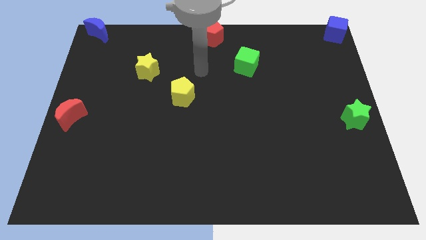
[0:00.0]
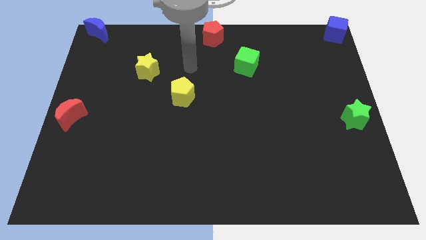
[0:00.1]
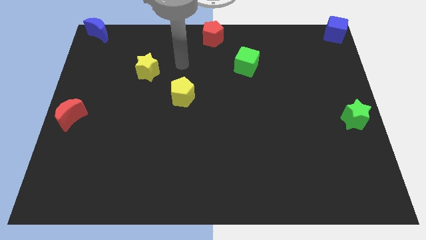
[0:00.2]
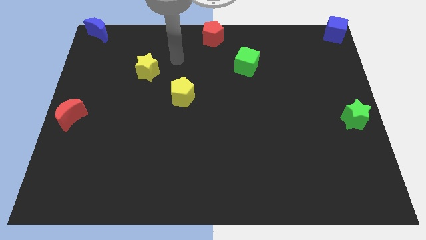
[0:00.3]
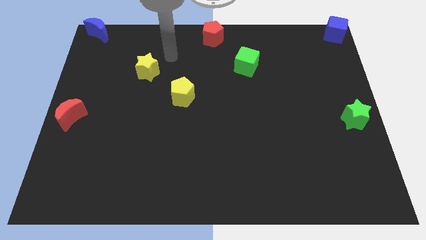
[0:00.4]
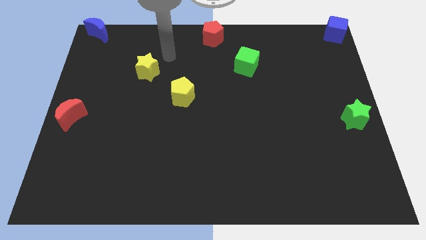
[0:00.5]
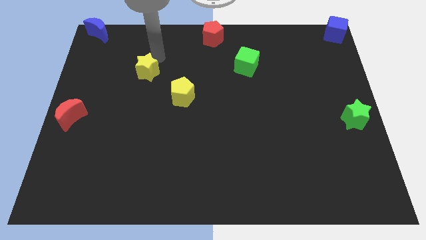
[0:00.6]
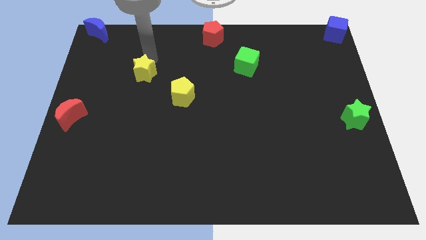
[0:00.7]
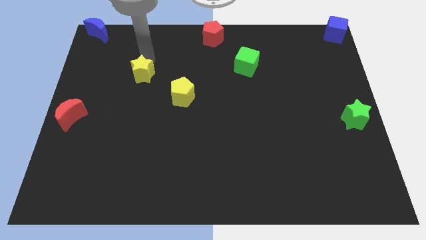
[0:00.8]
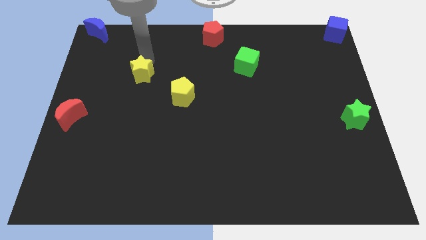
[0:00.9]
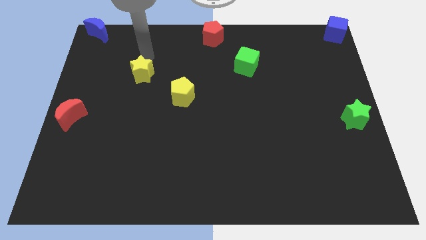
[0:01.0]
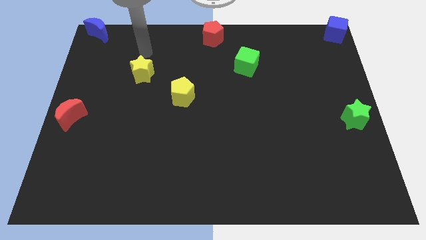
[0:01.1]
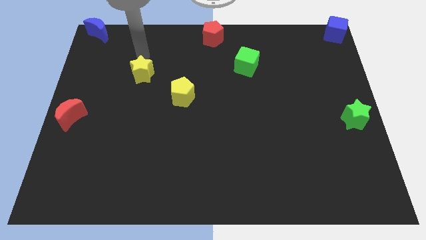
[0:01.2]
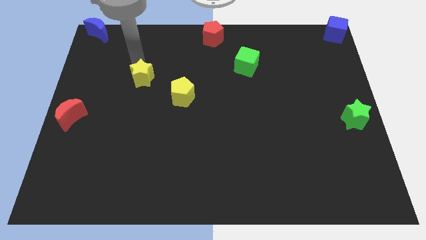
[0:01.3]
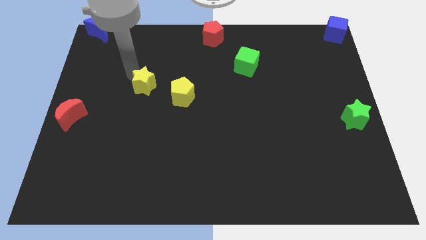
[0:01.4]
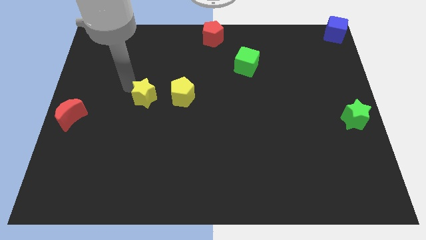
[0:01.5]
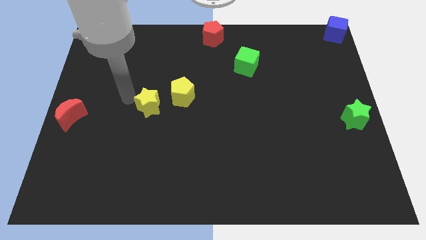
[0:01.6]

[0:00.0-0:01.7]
place the yellow star left to the yellow pentagon

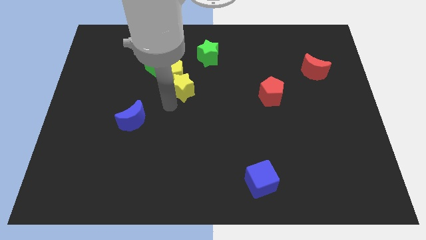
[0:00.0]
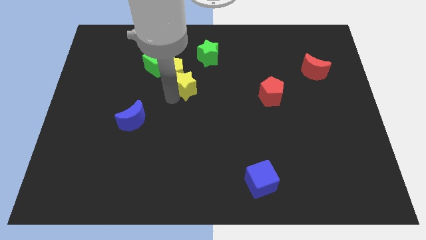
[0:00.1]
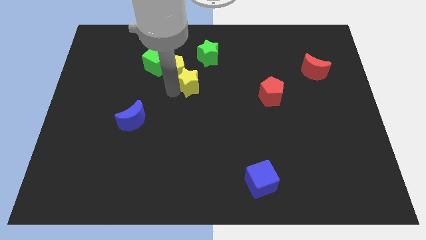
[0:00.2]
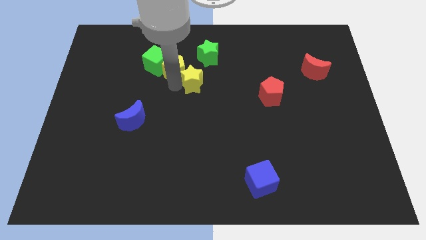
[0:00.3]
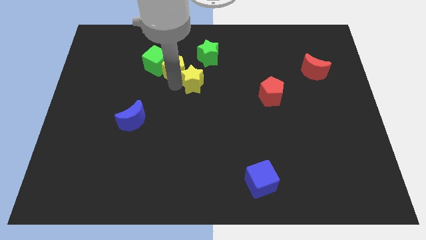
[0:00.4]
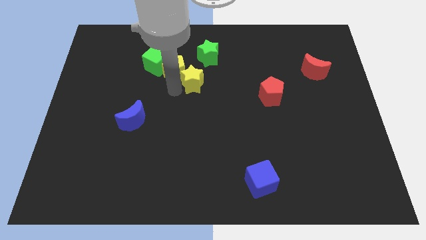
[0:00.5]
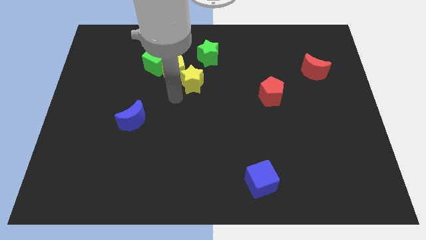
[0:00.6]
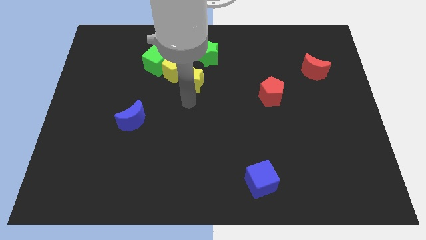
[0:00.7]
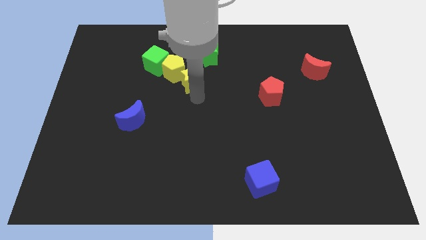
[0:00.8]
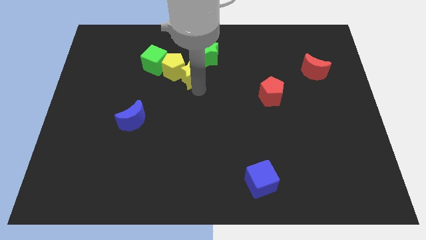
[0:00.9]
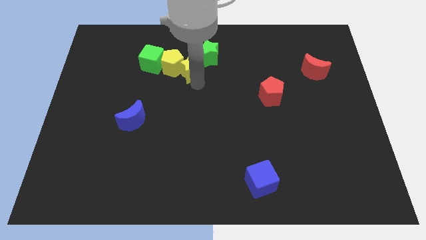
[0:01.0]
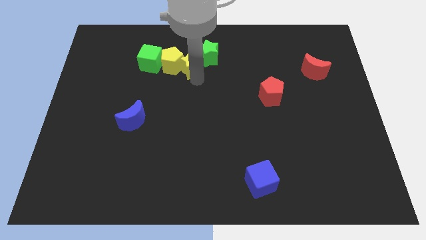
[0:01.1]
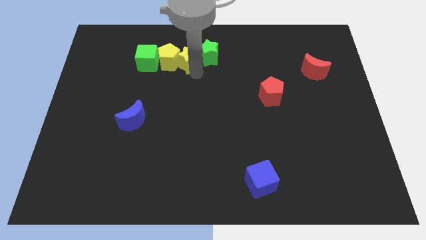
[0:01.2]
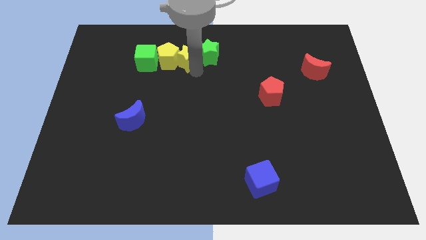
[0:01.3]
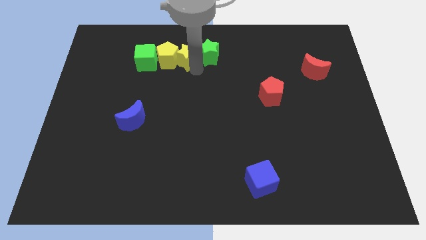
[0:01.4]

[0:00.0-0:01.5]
move yellow star in between green star and yellow pentagon

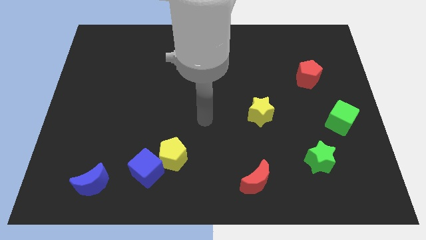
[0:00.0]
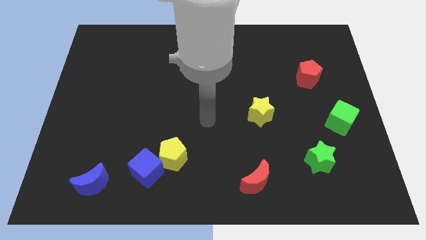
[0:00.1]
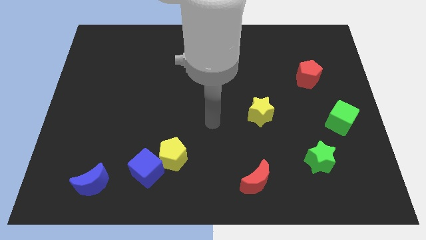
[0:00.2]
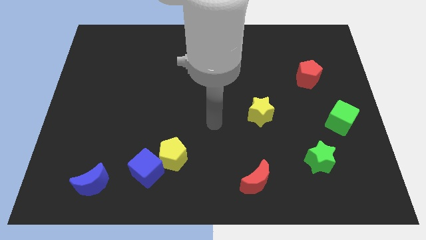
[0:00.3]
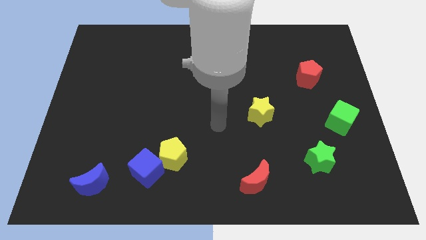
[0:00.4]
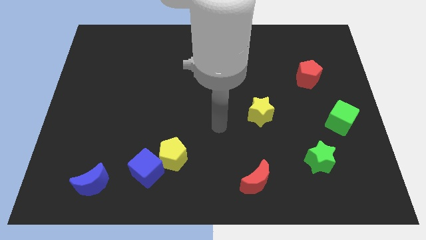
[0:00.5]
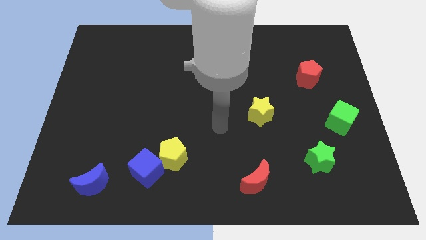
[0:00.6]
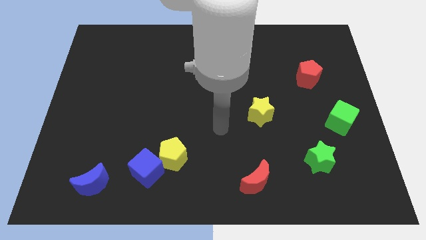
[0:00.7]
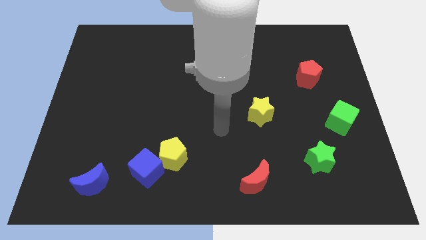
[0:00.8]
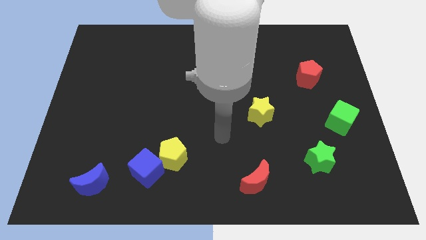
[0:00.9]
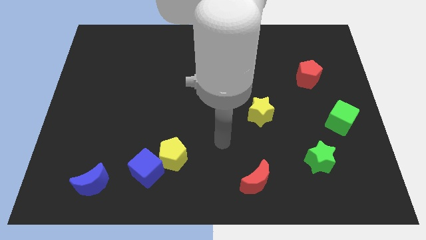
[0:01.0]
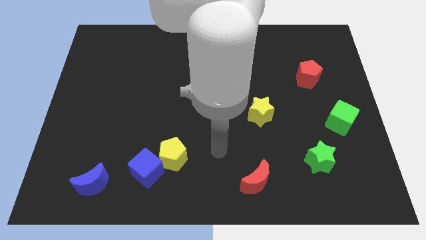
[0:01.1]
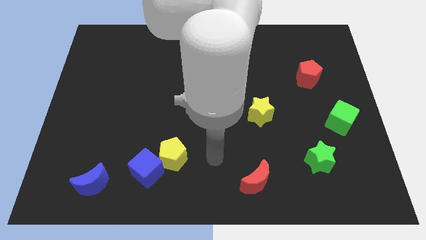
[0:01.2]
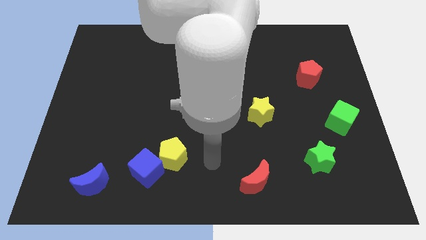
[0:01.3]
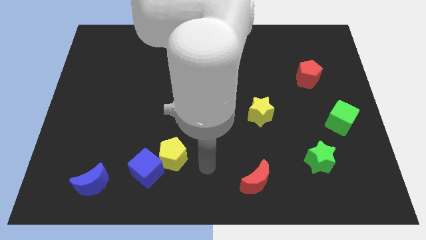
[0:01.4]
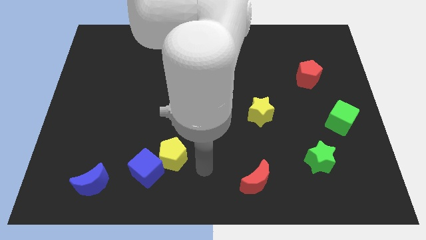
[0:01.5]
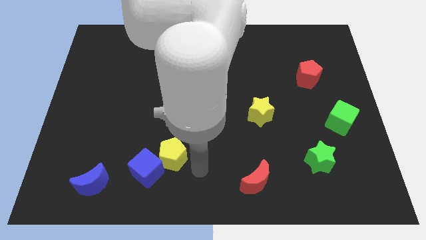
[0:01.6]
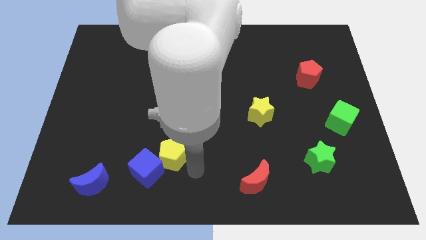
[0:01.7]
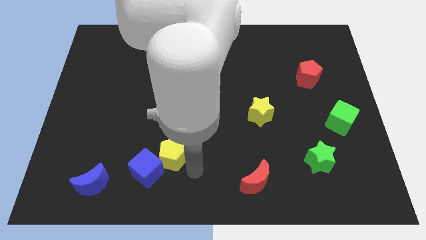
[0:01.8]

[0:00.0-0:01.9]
move your arm to the bottom left of the yellow pentagon

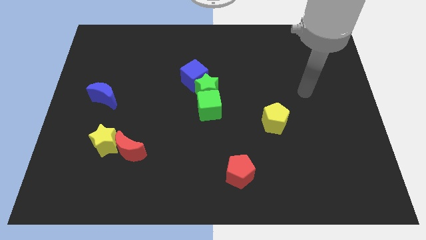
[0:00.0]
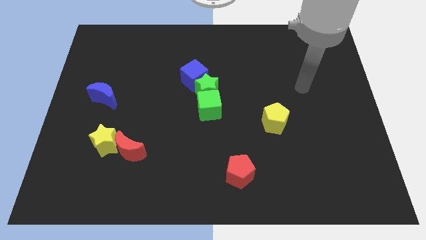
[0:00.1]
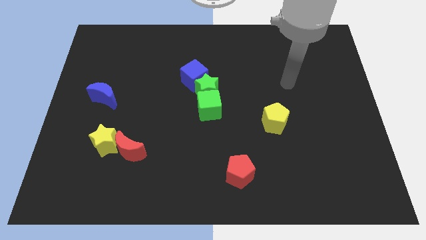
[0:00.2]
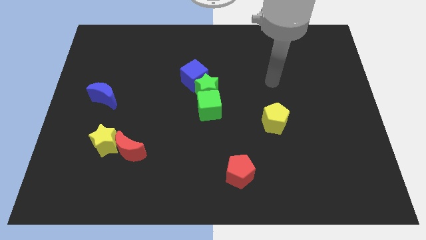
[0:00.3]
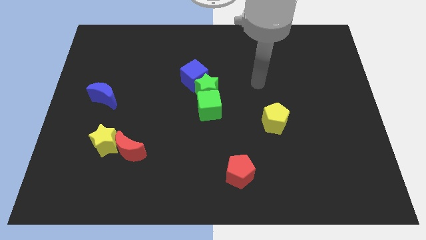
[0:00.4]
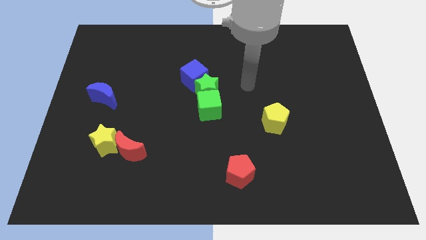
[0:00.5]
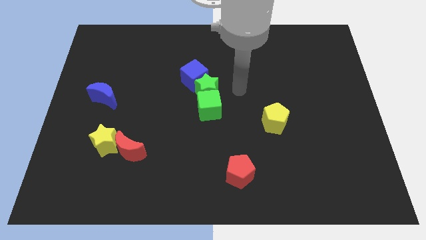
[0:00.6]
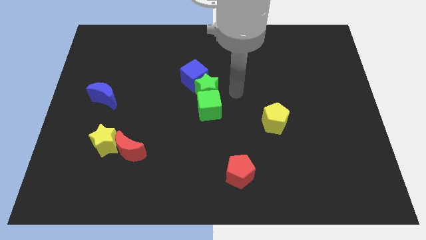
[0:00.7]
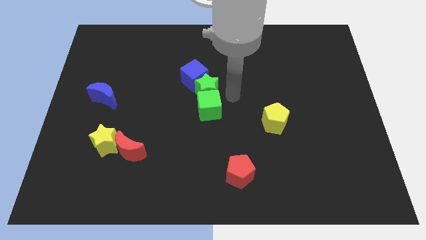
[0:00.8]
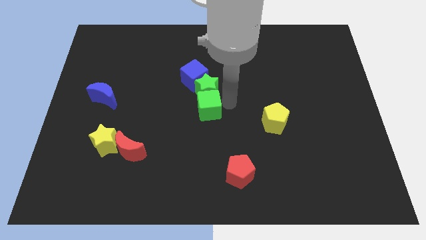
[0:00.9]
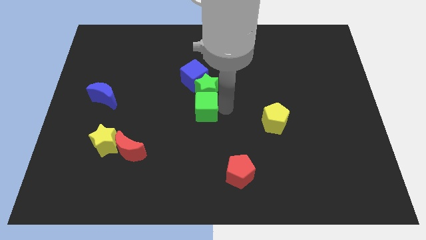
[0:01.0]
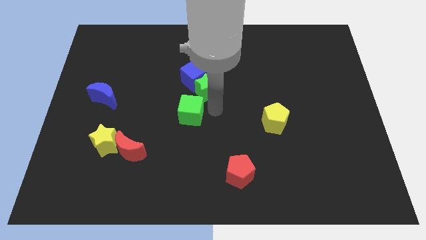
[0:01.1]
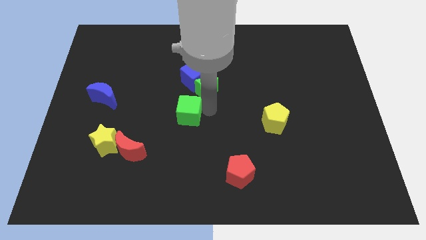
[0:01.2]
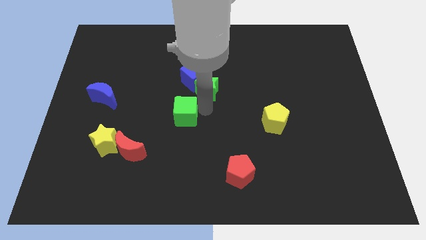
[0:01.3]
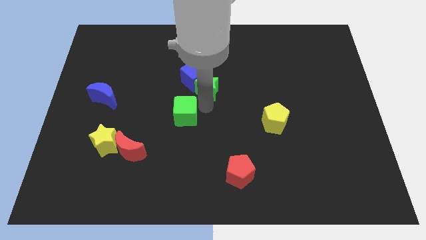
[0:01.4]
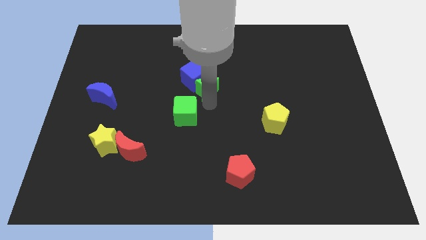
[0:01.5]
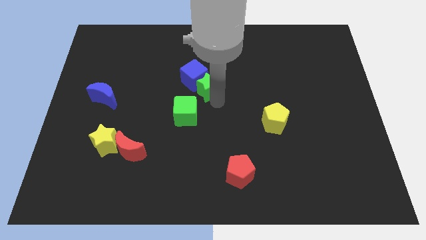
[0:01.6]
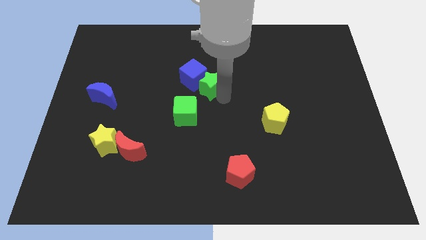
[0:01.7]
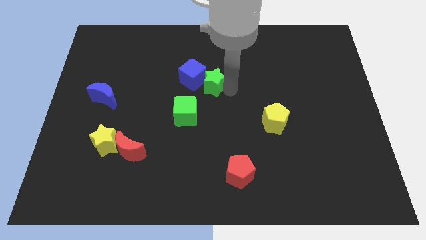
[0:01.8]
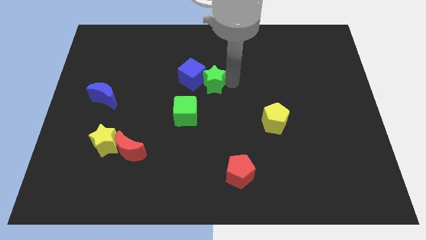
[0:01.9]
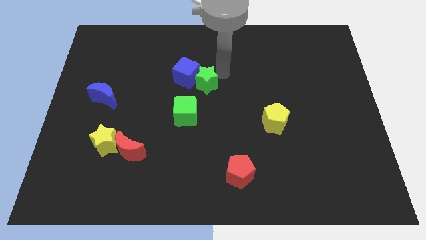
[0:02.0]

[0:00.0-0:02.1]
separate green cube and green star

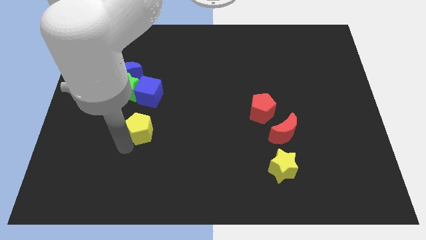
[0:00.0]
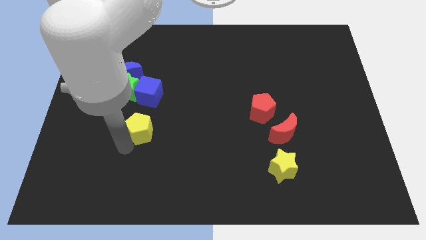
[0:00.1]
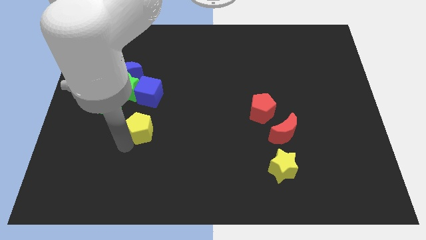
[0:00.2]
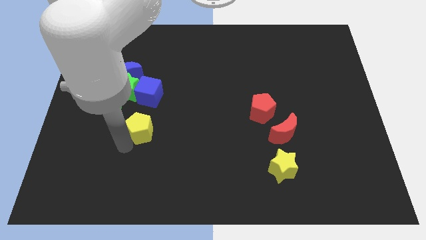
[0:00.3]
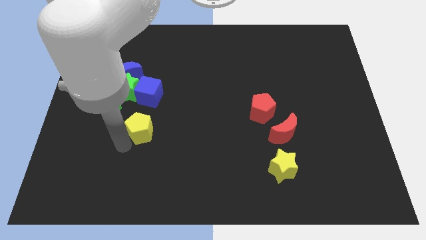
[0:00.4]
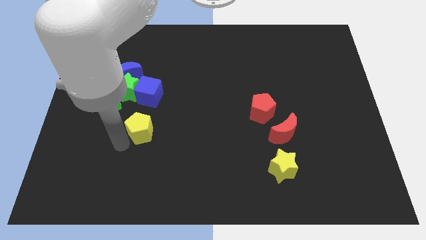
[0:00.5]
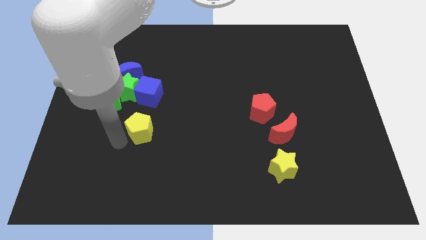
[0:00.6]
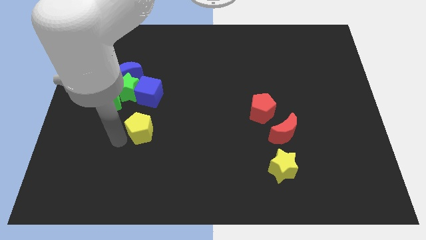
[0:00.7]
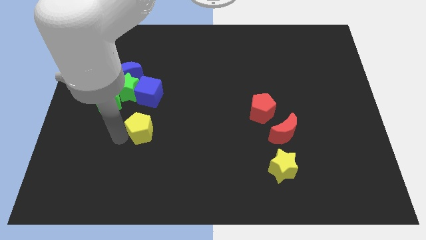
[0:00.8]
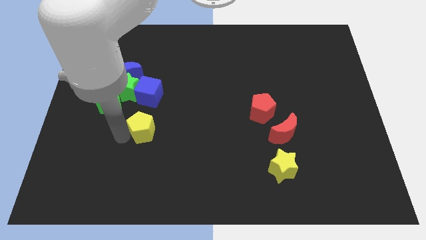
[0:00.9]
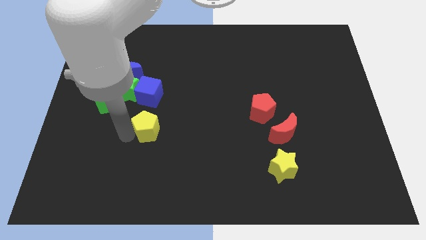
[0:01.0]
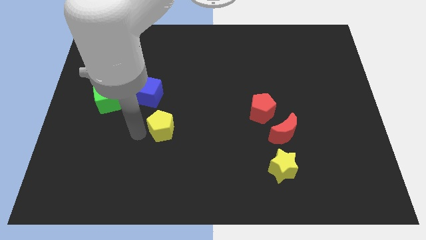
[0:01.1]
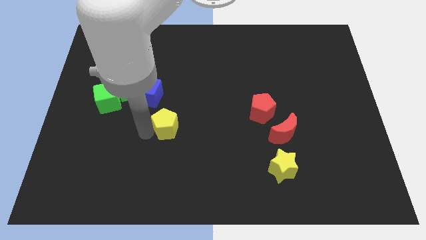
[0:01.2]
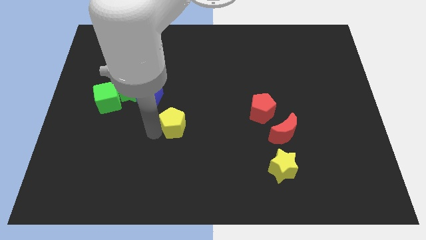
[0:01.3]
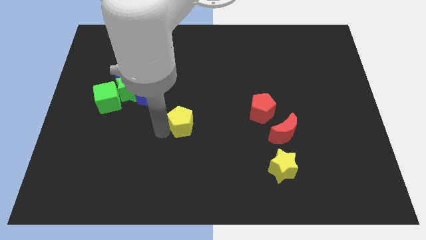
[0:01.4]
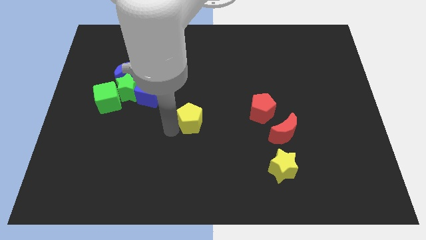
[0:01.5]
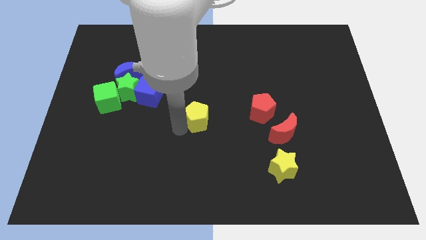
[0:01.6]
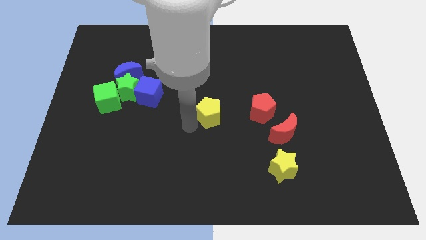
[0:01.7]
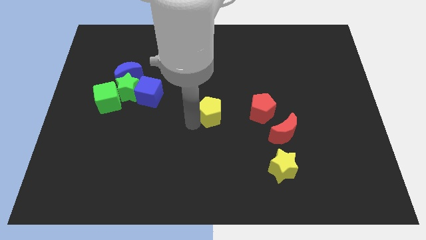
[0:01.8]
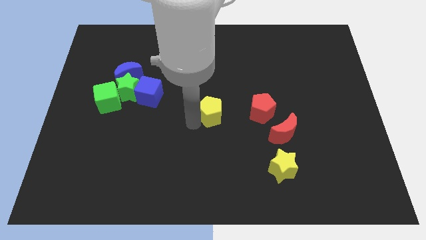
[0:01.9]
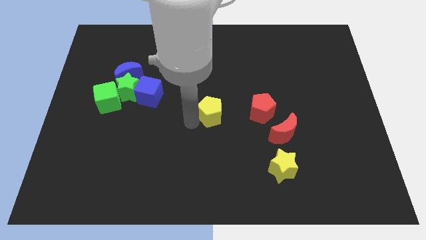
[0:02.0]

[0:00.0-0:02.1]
drag the yellow pentagon slightly up
